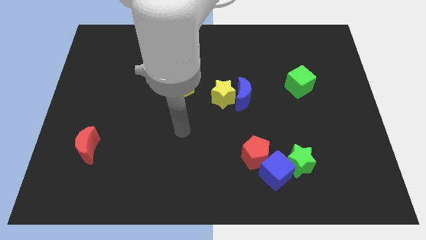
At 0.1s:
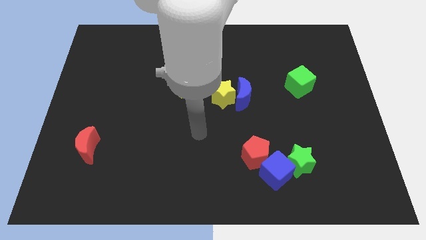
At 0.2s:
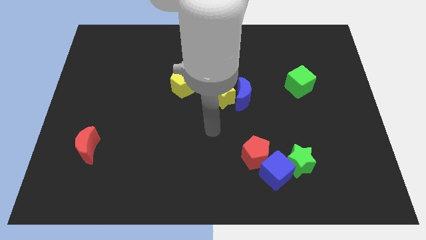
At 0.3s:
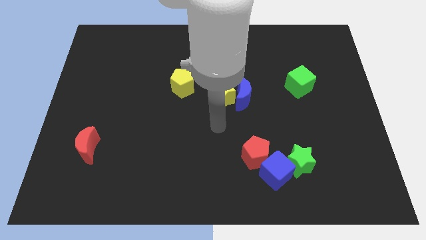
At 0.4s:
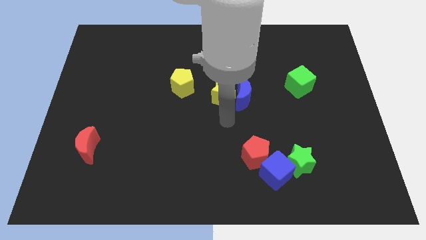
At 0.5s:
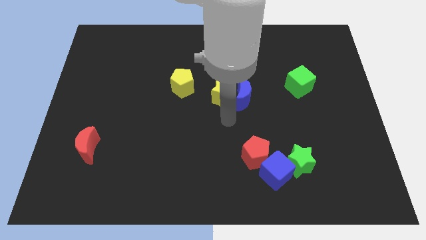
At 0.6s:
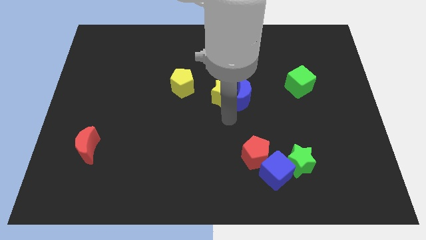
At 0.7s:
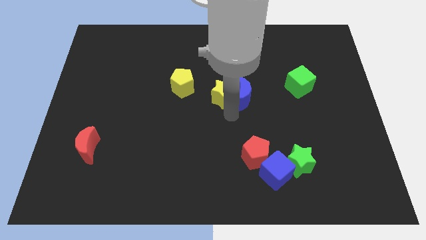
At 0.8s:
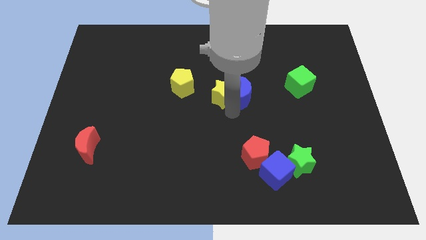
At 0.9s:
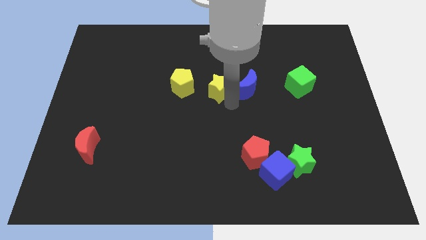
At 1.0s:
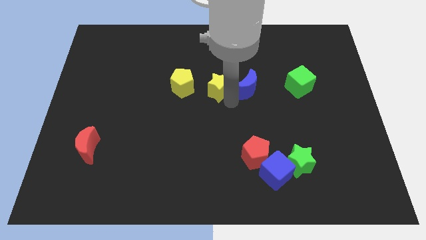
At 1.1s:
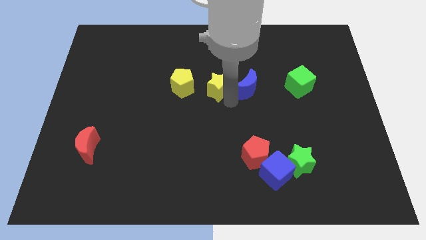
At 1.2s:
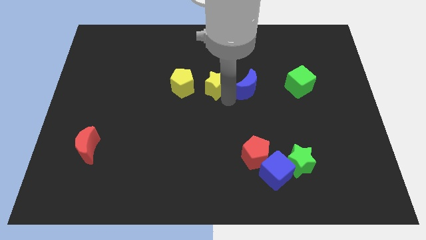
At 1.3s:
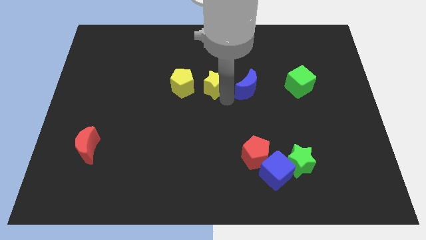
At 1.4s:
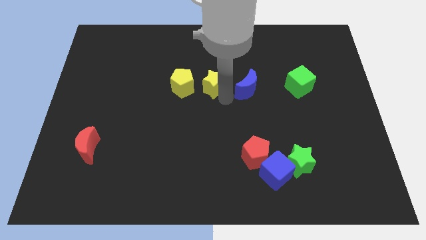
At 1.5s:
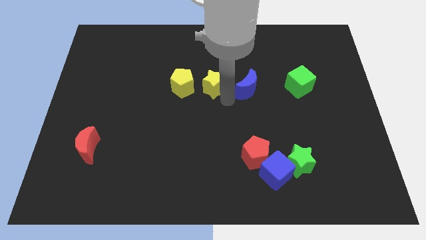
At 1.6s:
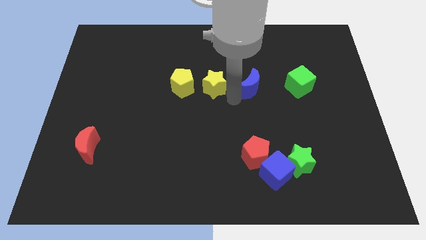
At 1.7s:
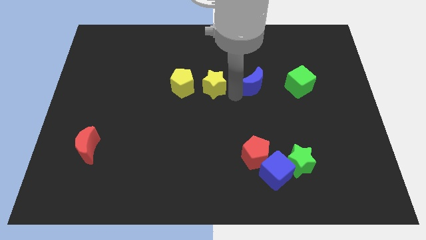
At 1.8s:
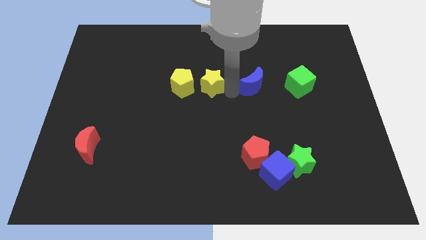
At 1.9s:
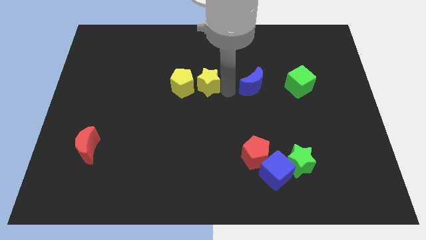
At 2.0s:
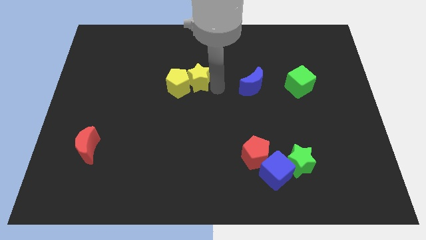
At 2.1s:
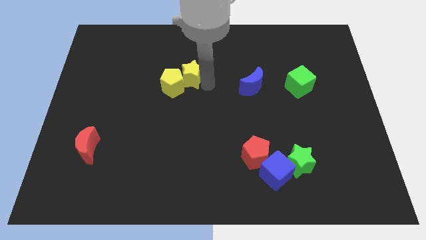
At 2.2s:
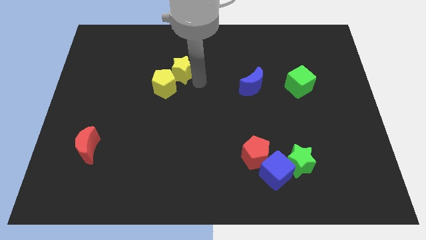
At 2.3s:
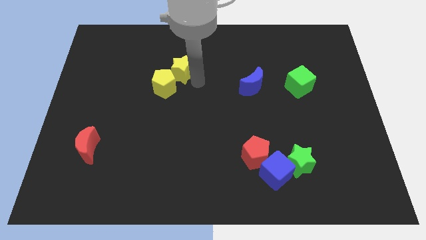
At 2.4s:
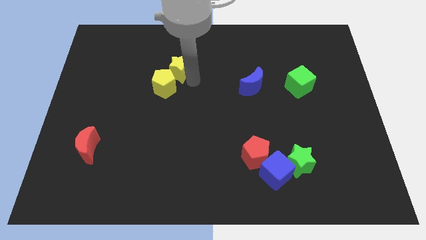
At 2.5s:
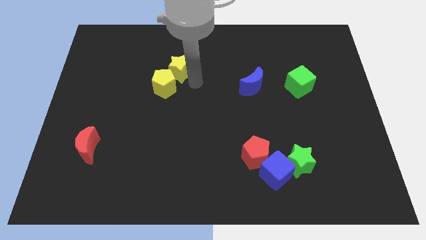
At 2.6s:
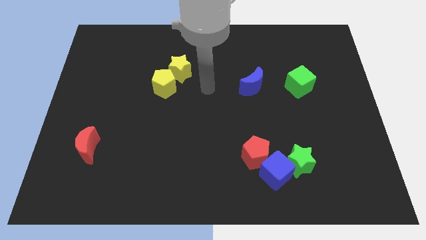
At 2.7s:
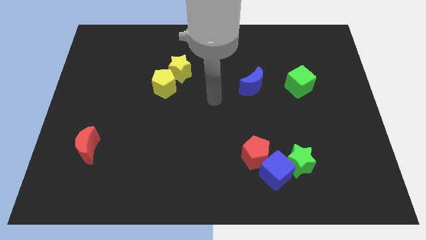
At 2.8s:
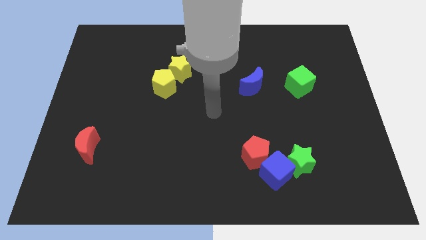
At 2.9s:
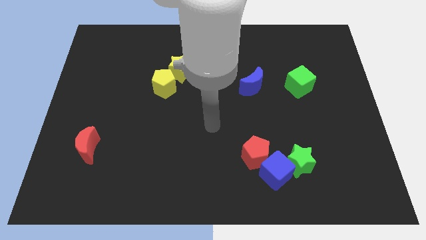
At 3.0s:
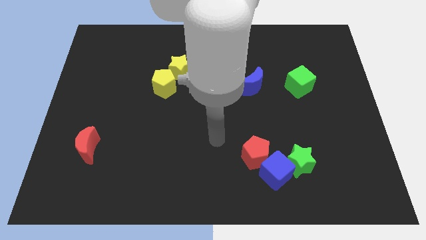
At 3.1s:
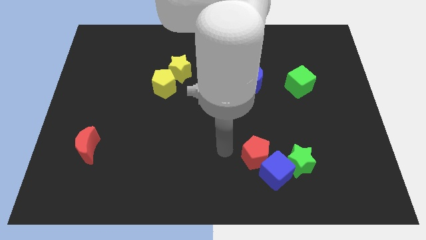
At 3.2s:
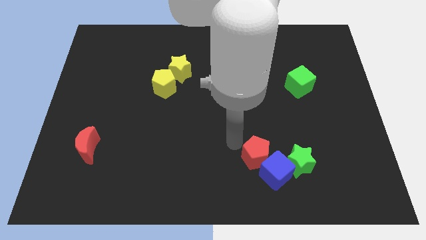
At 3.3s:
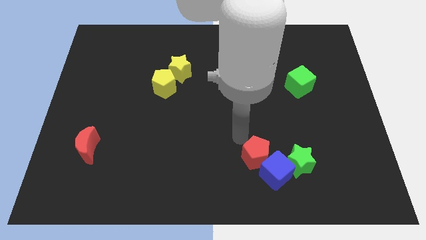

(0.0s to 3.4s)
push the yellow star into the yellow pentagon

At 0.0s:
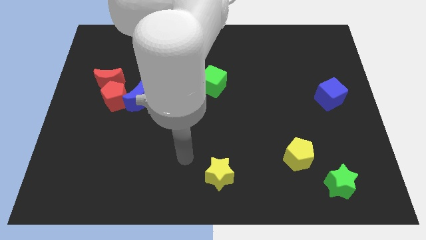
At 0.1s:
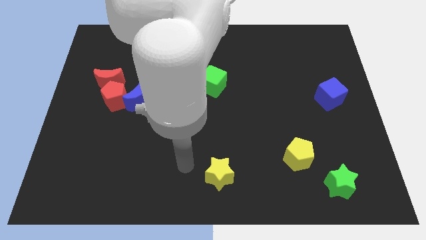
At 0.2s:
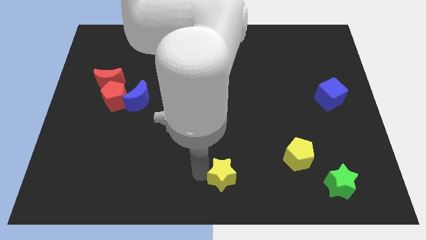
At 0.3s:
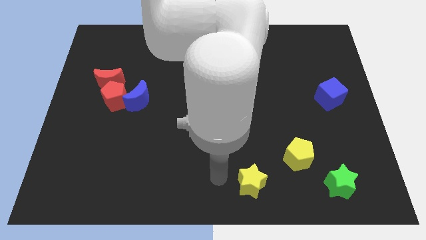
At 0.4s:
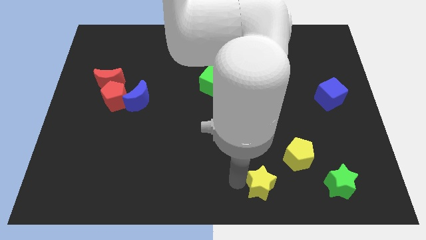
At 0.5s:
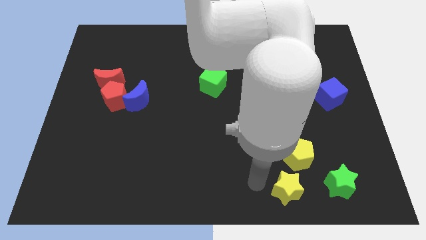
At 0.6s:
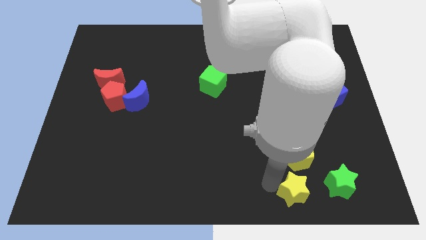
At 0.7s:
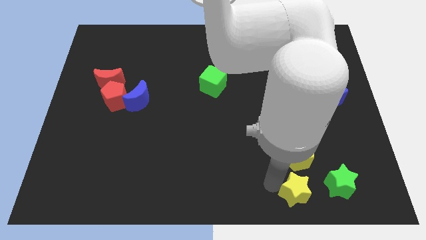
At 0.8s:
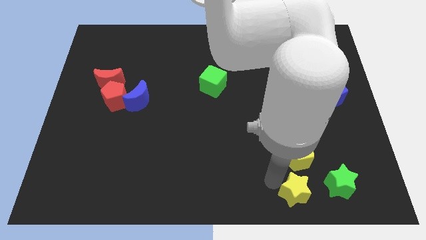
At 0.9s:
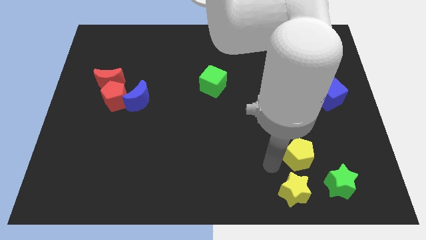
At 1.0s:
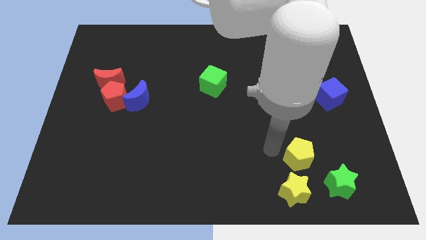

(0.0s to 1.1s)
place the yellow star to the bottom side of the yellow pentagon

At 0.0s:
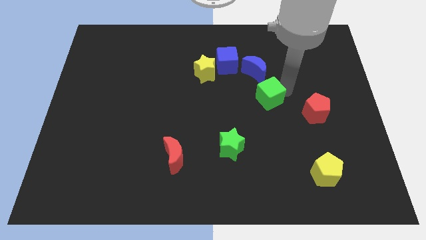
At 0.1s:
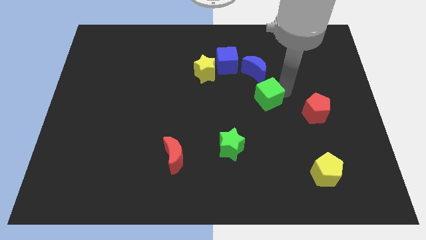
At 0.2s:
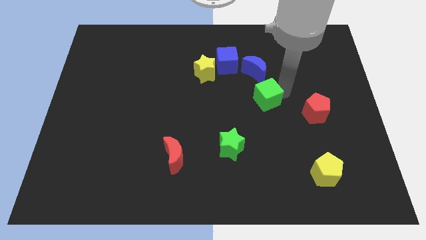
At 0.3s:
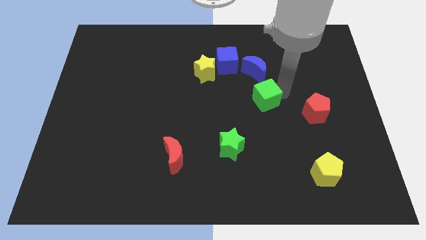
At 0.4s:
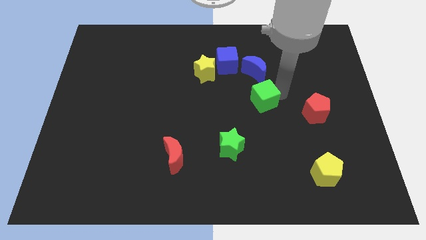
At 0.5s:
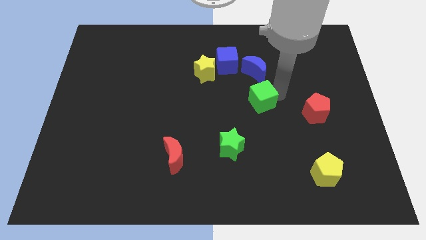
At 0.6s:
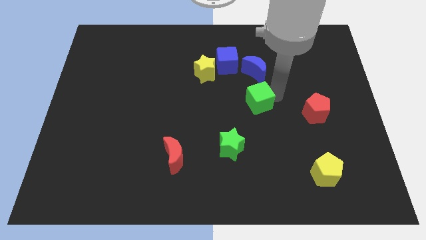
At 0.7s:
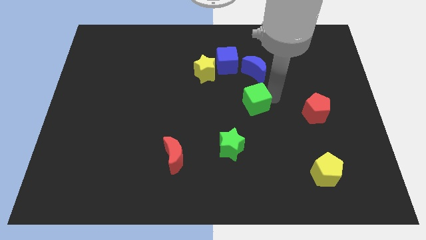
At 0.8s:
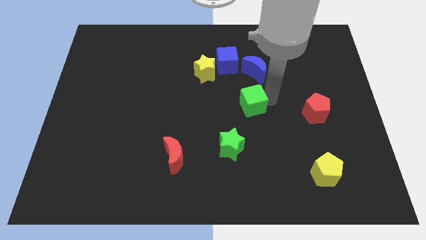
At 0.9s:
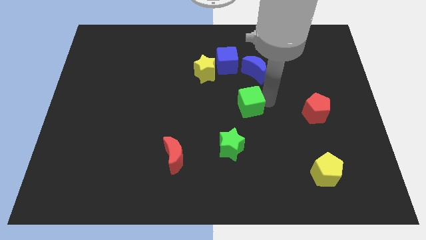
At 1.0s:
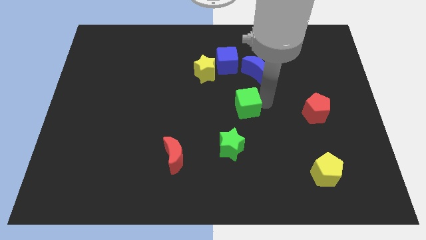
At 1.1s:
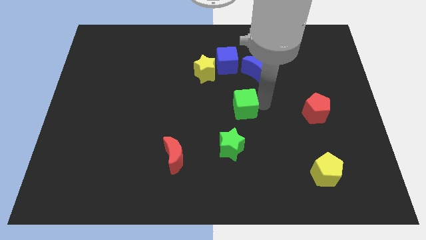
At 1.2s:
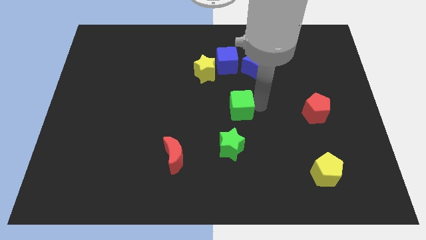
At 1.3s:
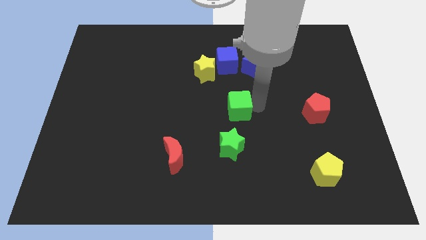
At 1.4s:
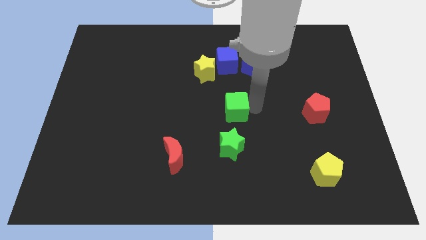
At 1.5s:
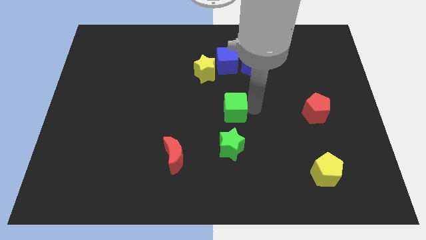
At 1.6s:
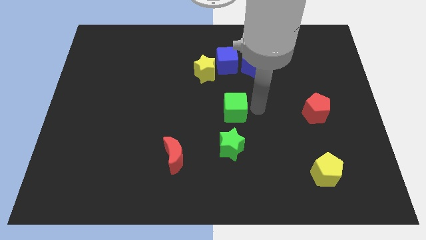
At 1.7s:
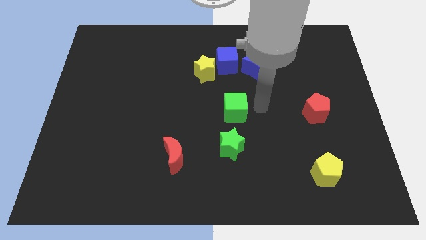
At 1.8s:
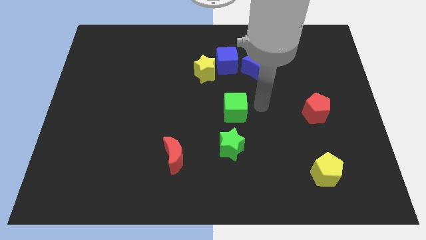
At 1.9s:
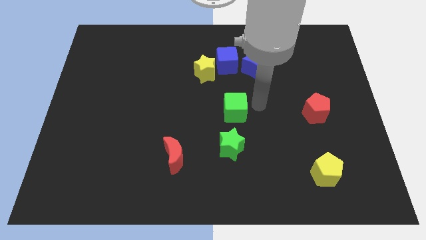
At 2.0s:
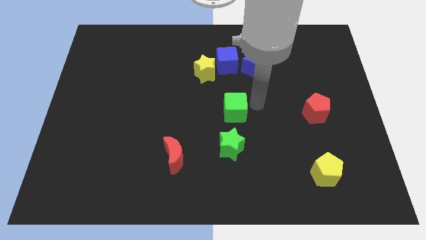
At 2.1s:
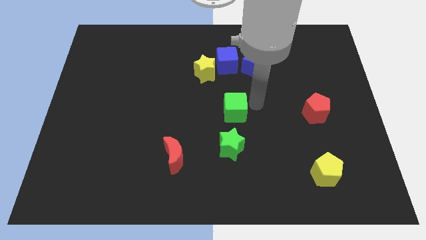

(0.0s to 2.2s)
place the green cube on the top of green star

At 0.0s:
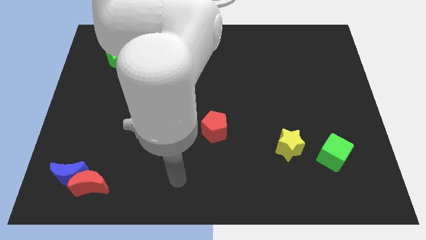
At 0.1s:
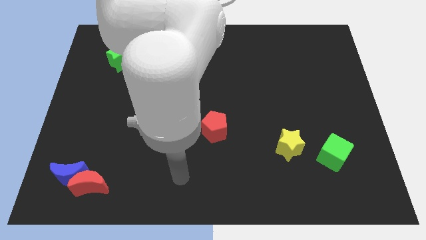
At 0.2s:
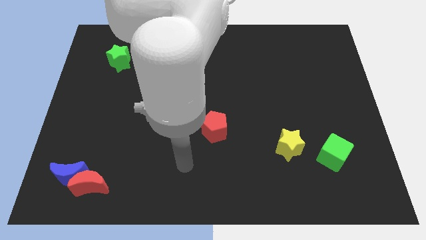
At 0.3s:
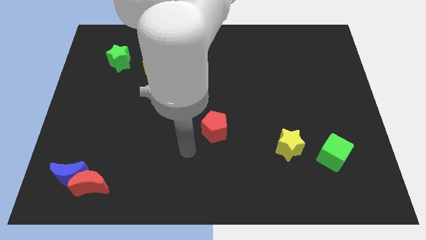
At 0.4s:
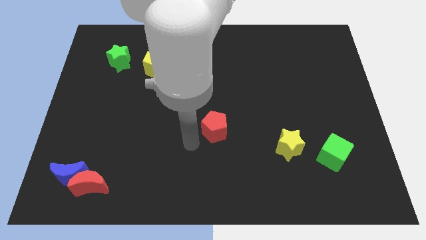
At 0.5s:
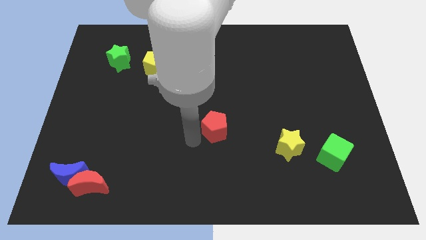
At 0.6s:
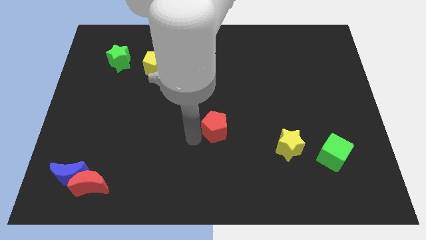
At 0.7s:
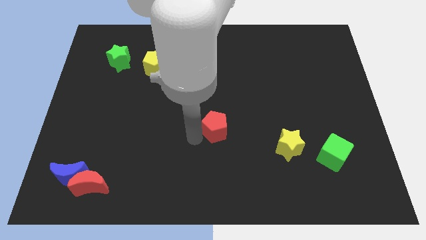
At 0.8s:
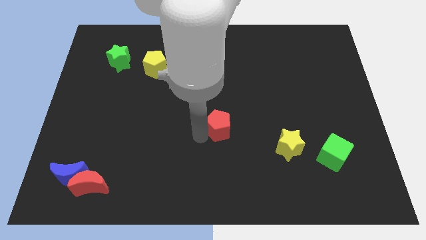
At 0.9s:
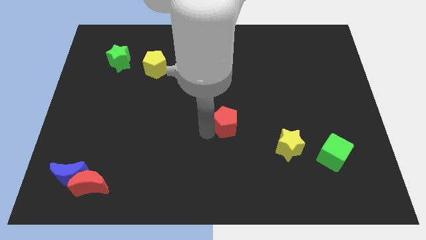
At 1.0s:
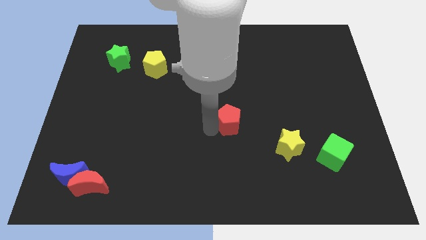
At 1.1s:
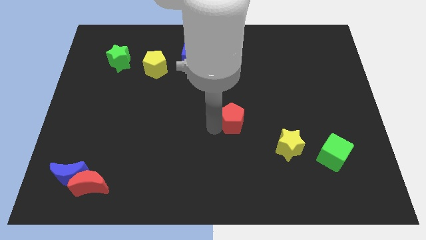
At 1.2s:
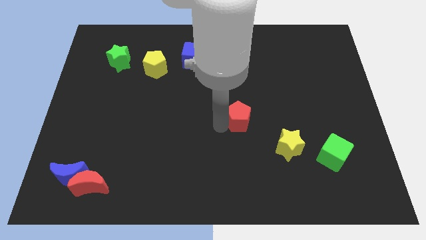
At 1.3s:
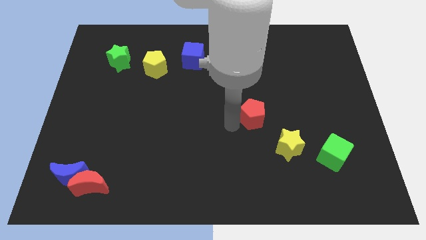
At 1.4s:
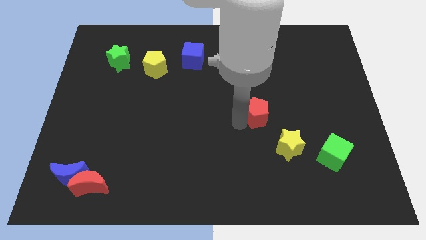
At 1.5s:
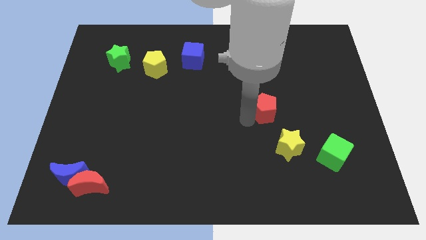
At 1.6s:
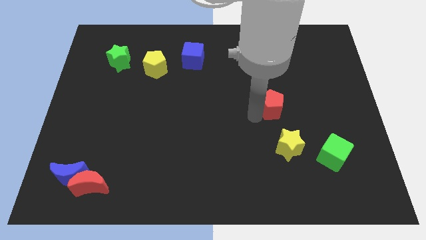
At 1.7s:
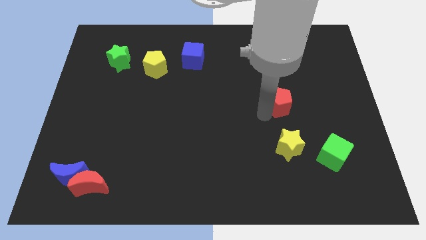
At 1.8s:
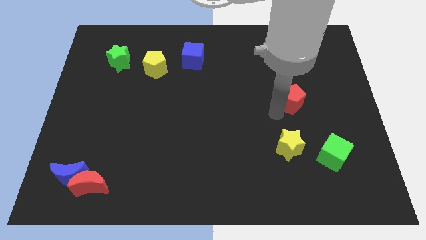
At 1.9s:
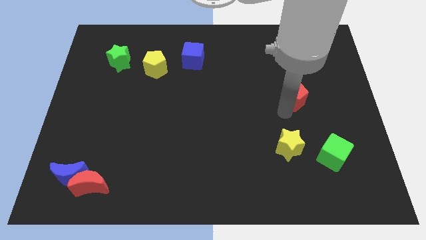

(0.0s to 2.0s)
place red pentagon vertical to yellow star

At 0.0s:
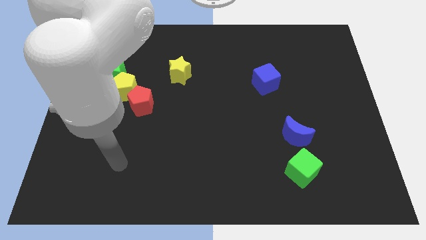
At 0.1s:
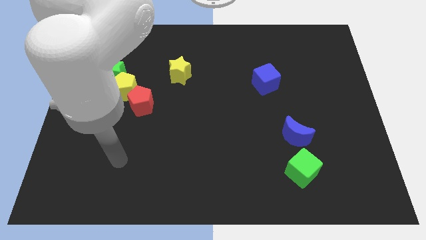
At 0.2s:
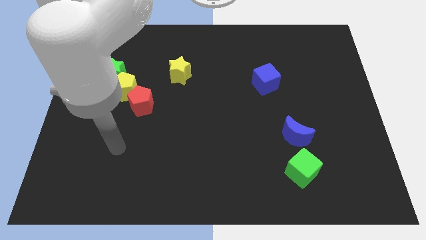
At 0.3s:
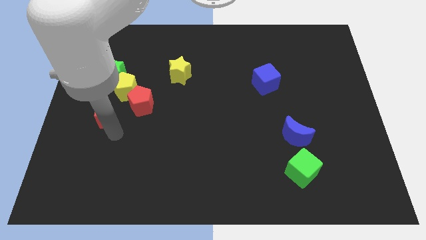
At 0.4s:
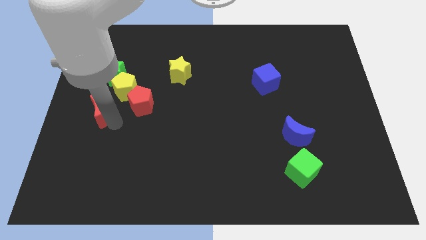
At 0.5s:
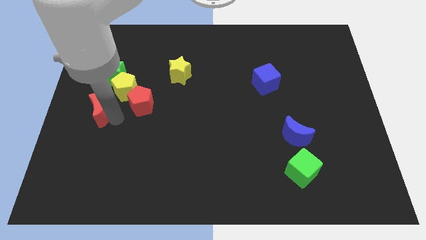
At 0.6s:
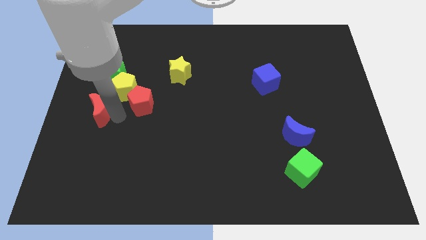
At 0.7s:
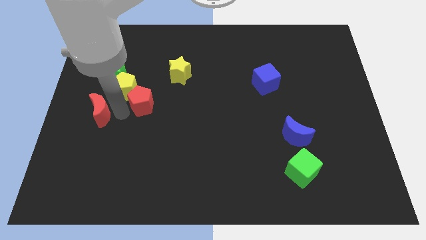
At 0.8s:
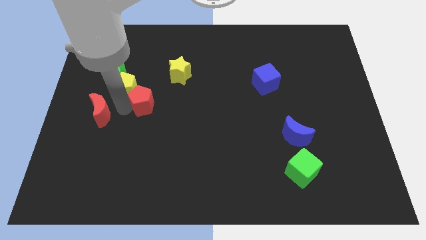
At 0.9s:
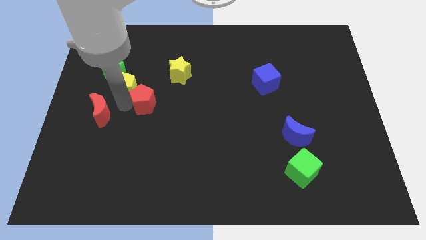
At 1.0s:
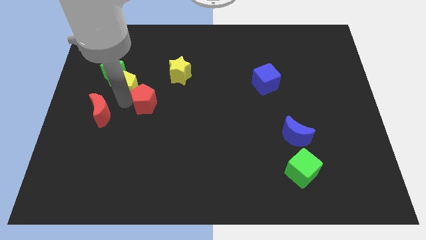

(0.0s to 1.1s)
place the arm to the bottom of the yellow pentagon
